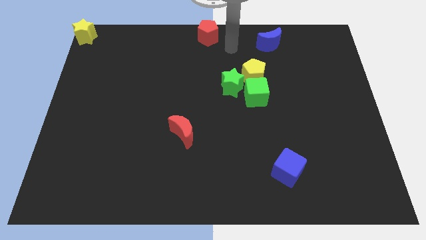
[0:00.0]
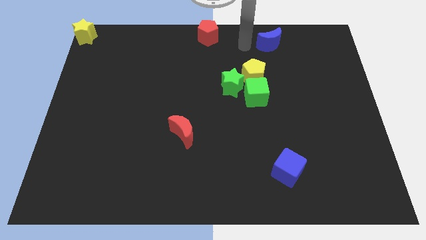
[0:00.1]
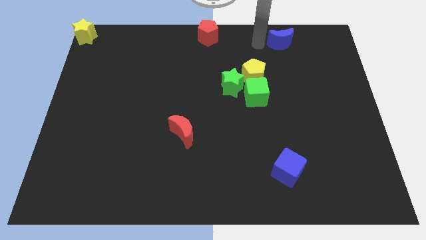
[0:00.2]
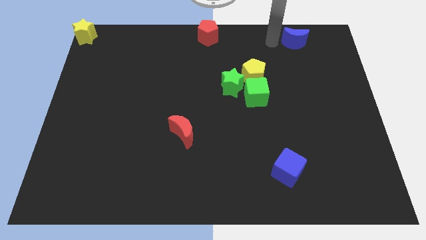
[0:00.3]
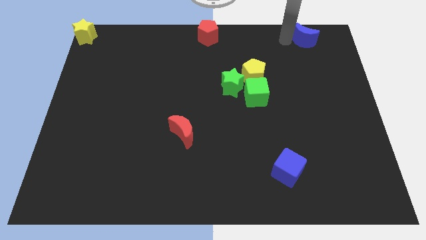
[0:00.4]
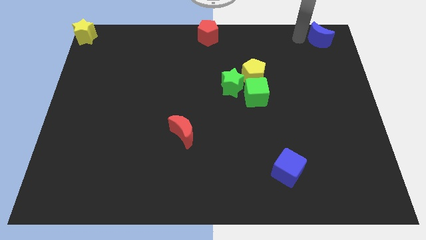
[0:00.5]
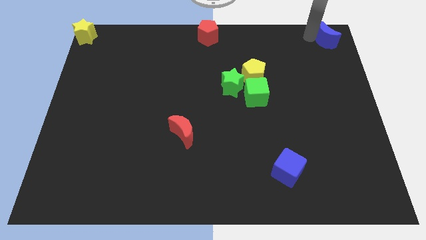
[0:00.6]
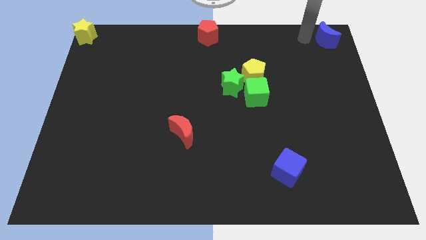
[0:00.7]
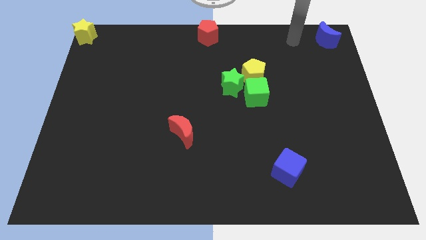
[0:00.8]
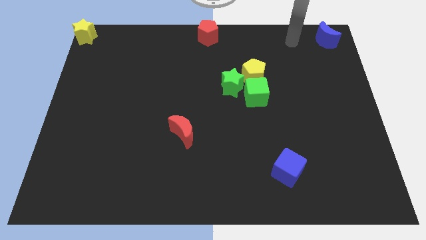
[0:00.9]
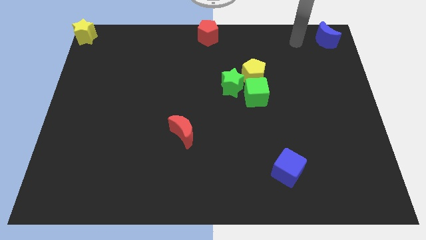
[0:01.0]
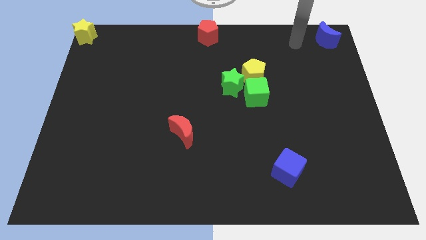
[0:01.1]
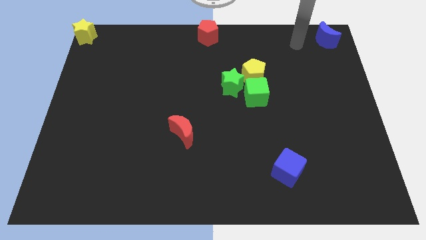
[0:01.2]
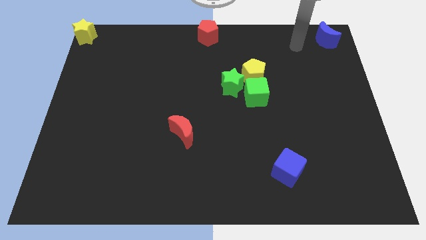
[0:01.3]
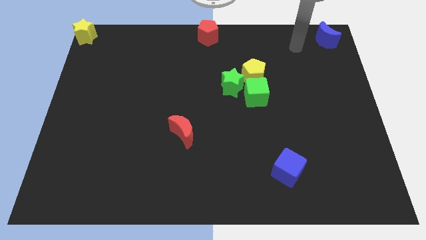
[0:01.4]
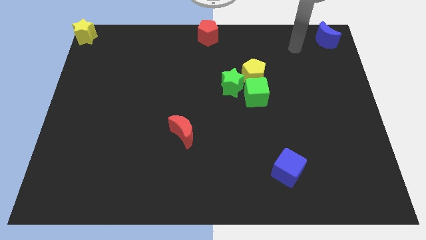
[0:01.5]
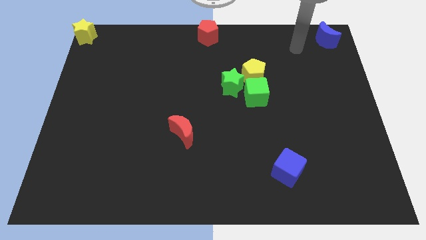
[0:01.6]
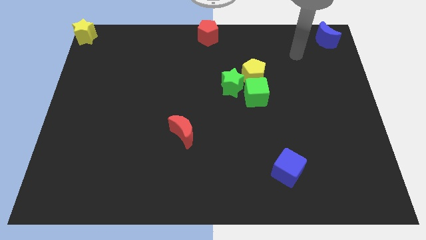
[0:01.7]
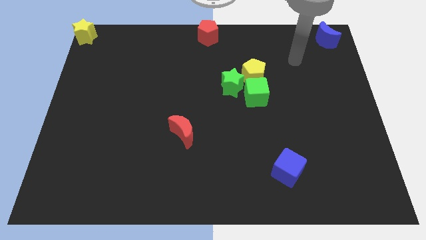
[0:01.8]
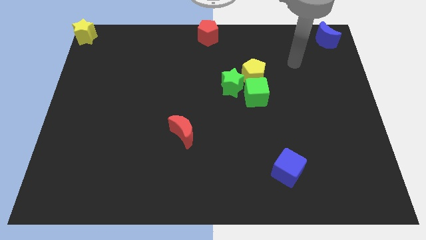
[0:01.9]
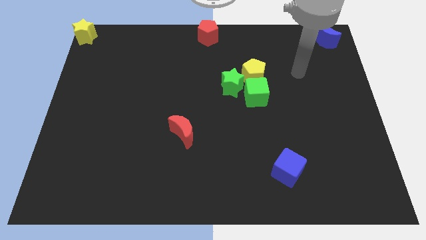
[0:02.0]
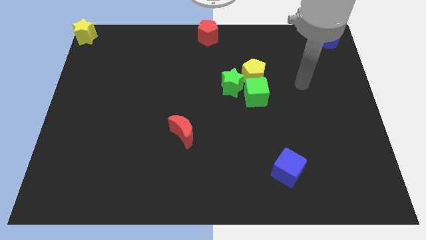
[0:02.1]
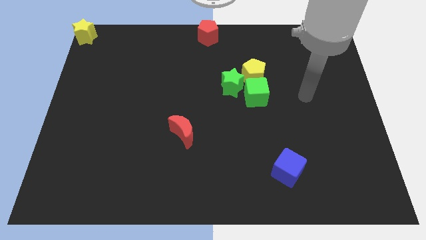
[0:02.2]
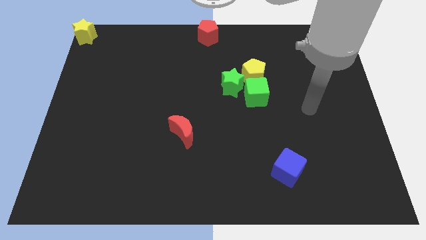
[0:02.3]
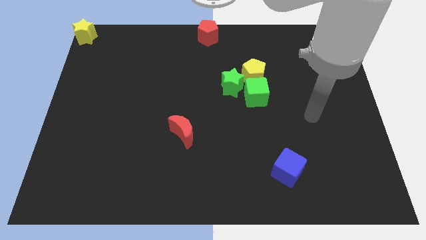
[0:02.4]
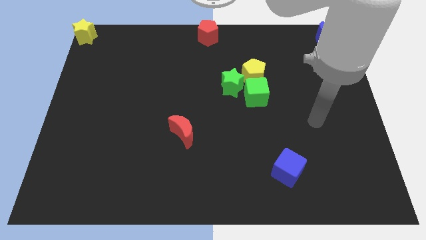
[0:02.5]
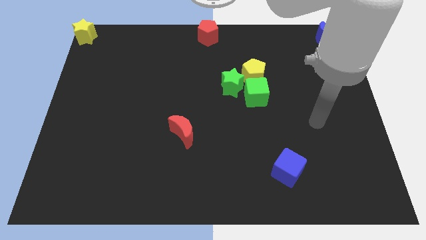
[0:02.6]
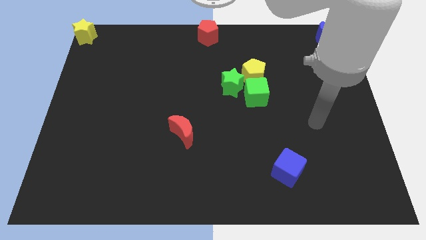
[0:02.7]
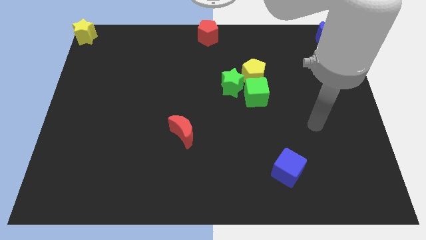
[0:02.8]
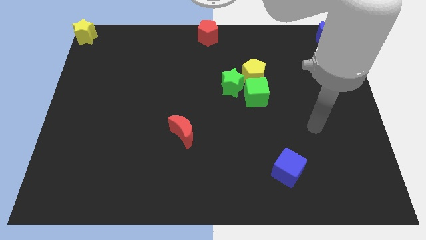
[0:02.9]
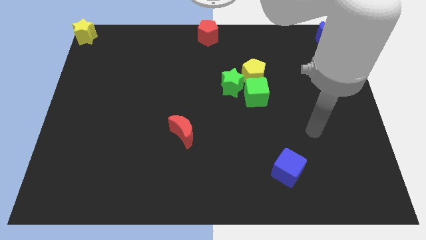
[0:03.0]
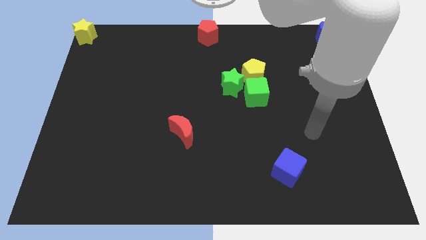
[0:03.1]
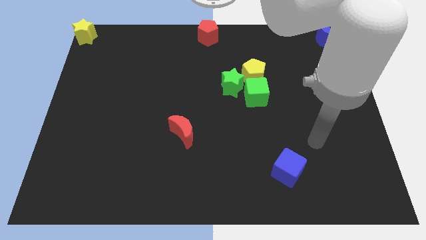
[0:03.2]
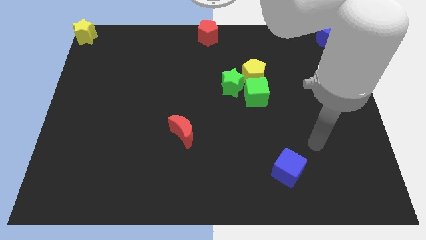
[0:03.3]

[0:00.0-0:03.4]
place the blue moon parallel right to the red pentagon

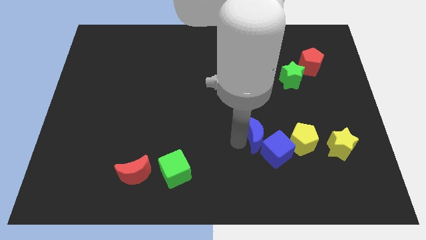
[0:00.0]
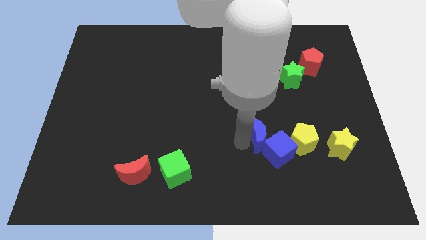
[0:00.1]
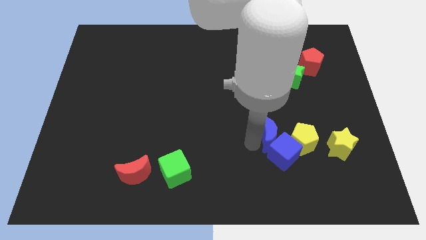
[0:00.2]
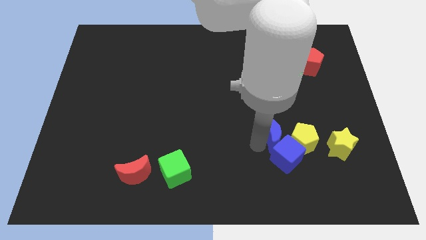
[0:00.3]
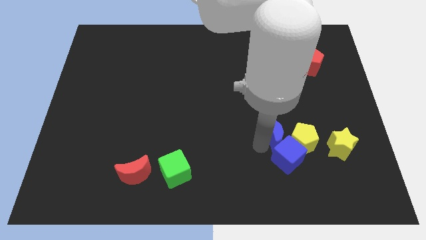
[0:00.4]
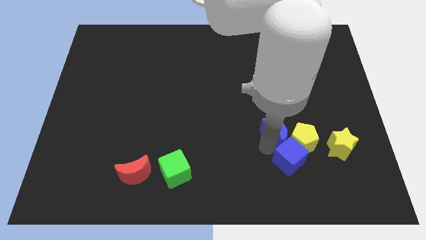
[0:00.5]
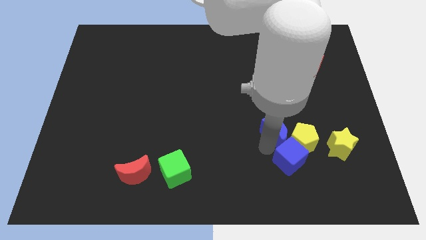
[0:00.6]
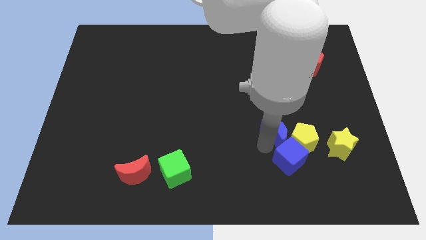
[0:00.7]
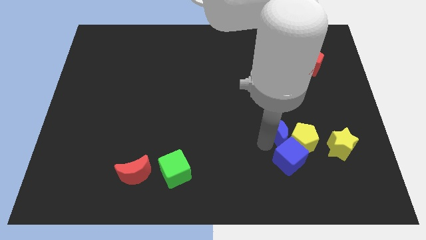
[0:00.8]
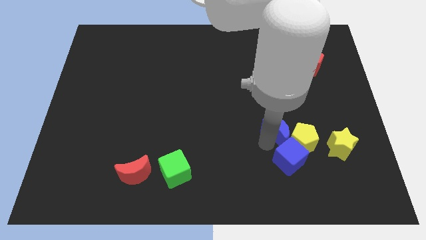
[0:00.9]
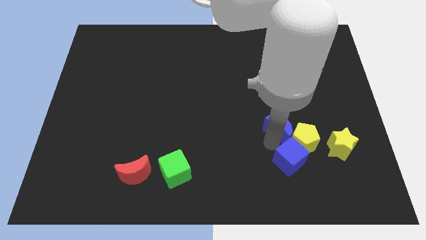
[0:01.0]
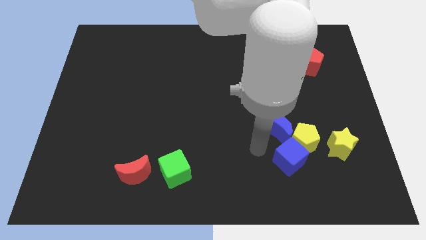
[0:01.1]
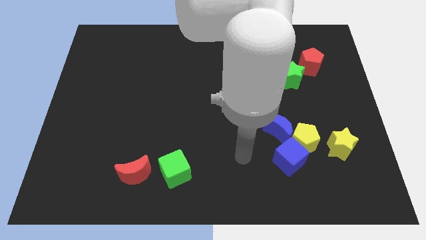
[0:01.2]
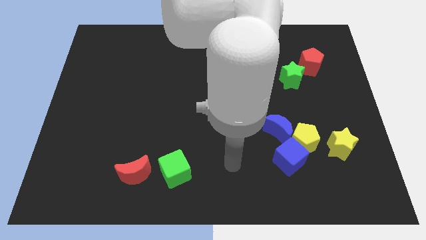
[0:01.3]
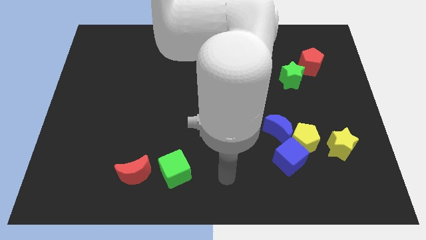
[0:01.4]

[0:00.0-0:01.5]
move the blue crescent above to the yellow pentagon

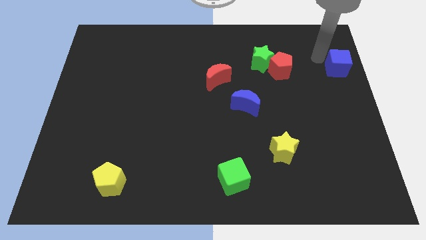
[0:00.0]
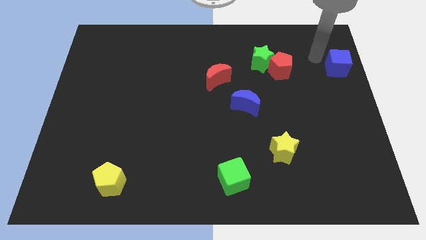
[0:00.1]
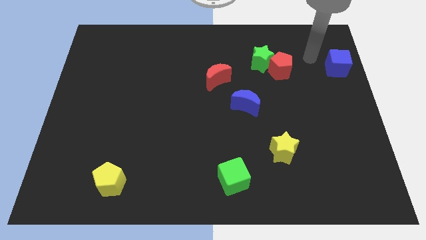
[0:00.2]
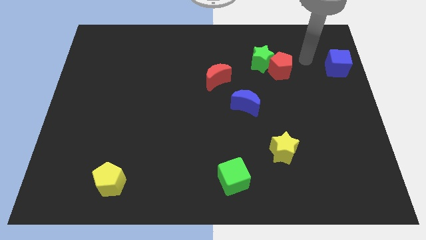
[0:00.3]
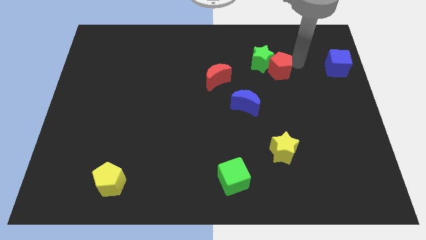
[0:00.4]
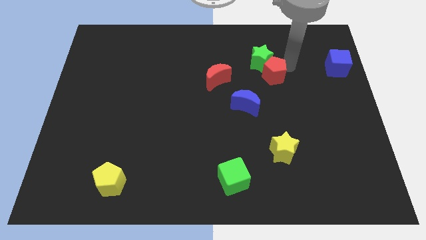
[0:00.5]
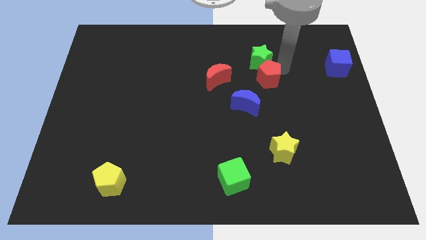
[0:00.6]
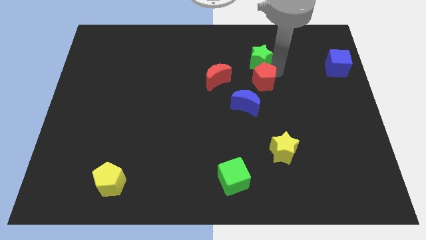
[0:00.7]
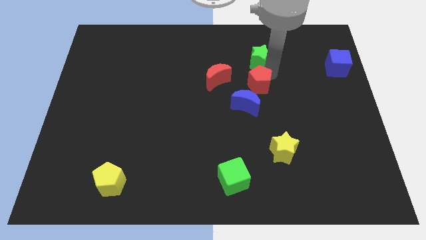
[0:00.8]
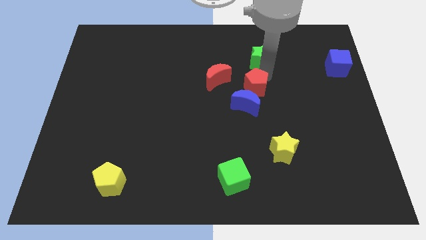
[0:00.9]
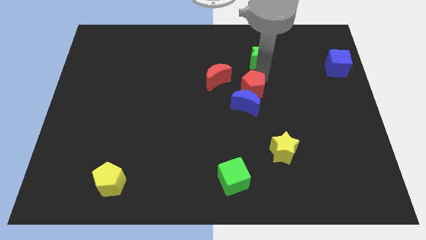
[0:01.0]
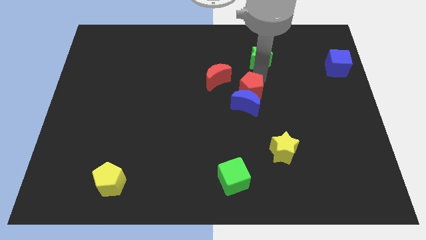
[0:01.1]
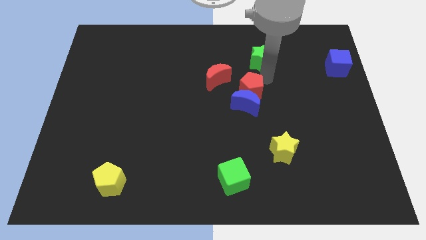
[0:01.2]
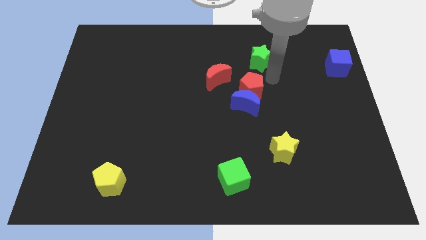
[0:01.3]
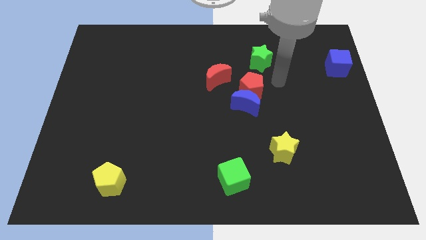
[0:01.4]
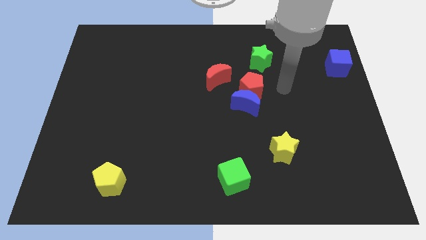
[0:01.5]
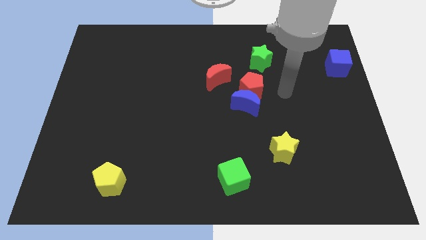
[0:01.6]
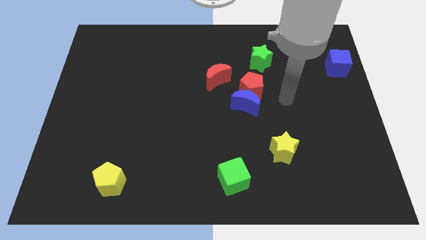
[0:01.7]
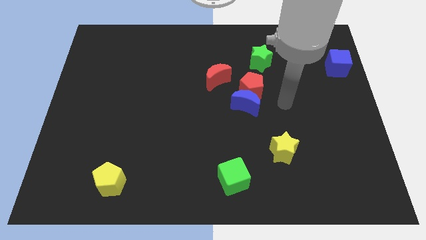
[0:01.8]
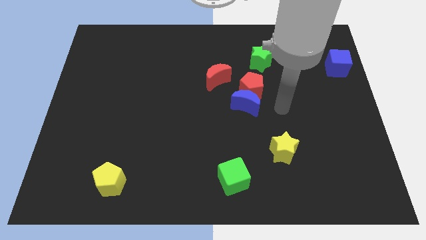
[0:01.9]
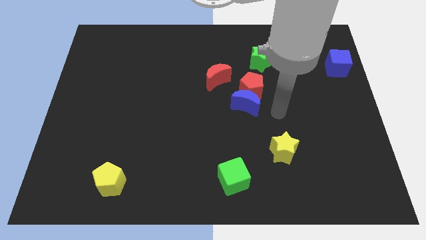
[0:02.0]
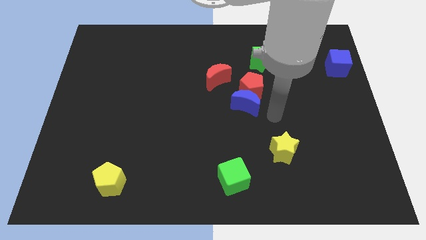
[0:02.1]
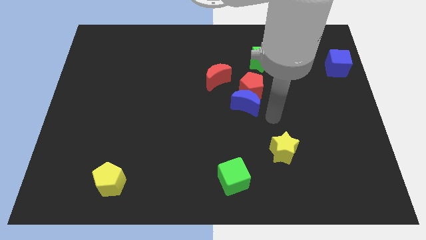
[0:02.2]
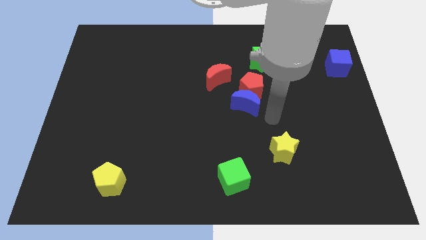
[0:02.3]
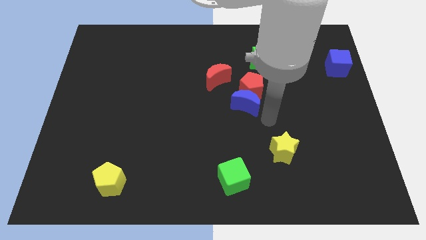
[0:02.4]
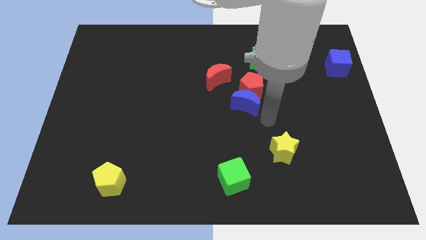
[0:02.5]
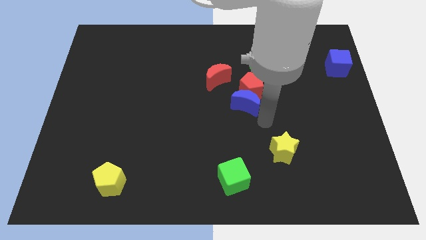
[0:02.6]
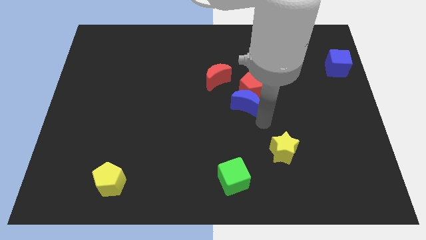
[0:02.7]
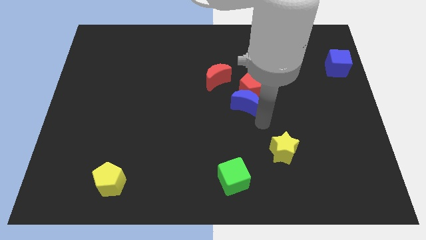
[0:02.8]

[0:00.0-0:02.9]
move the red pentagon above the blue crescent

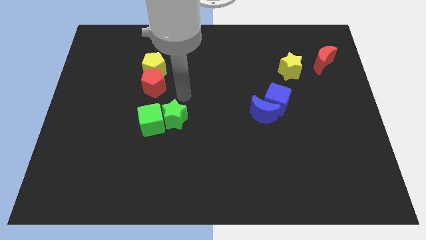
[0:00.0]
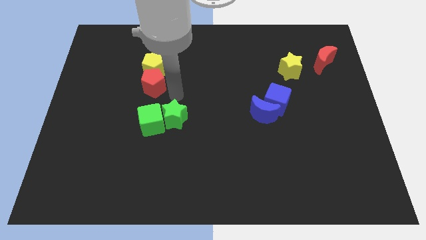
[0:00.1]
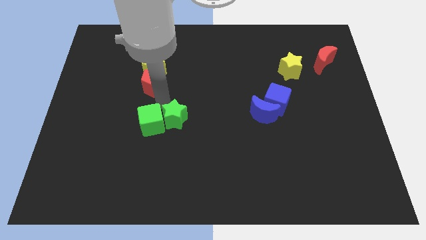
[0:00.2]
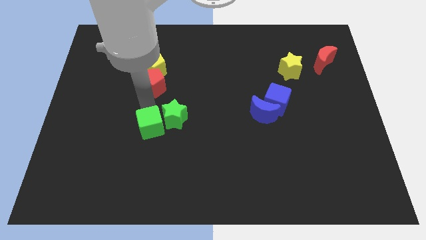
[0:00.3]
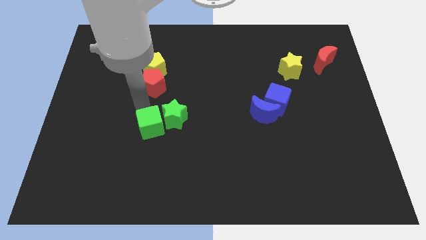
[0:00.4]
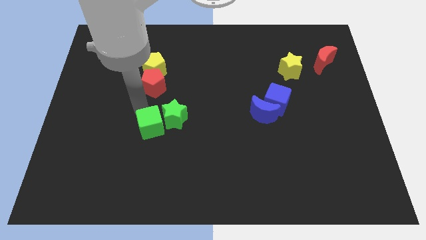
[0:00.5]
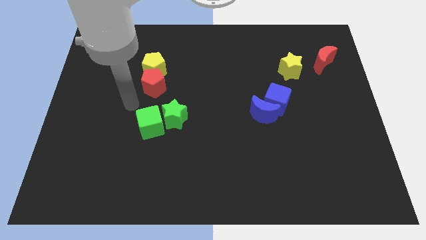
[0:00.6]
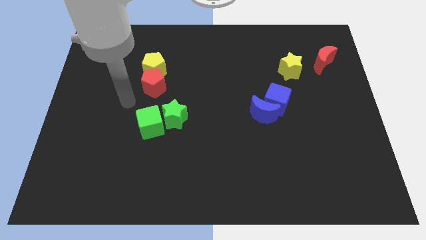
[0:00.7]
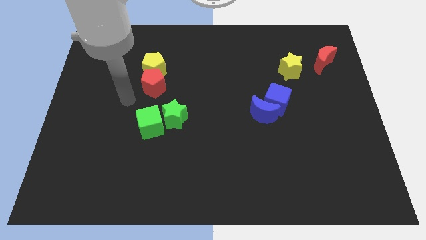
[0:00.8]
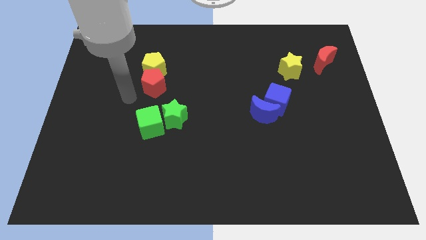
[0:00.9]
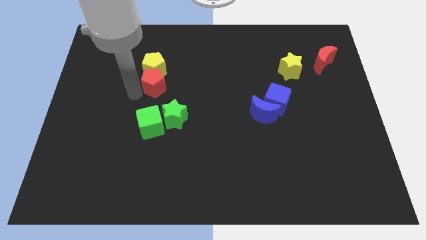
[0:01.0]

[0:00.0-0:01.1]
move your arm to the left side of the red pentagon

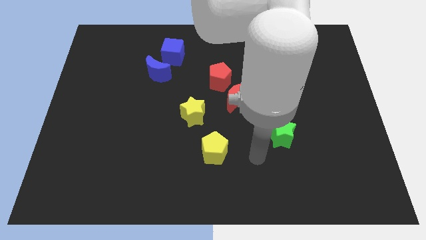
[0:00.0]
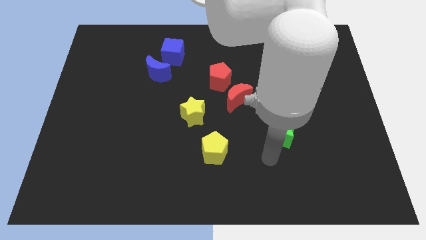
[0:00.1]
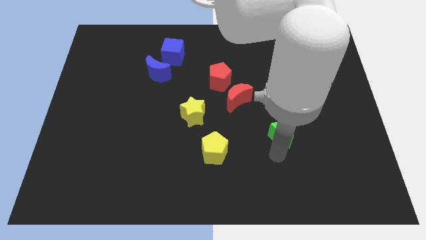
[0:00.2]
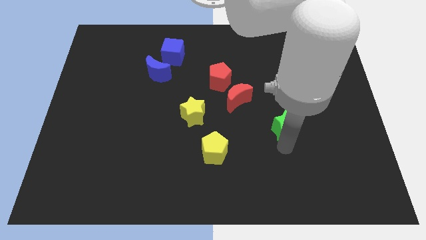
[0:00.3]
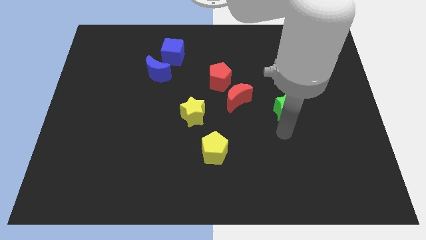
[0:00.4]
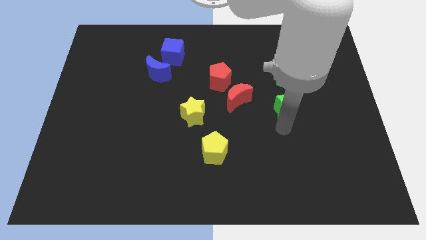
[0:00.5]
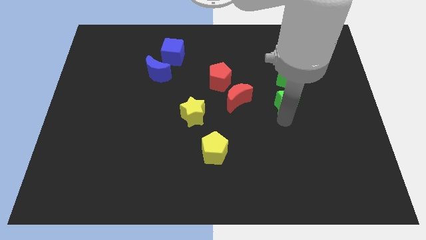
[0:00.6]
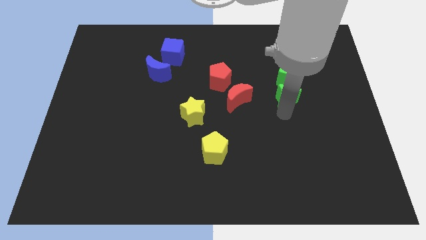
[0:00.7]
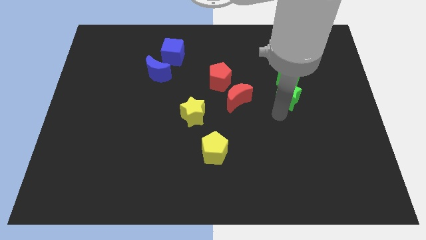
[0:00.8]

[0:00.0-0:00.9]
move the green star to the bottom side of the green cube
